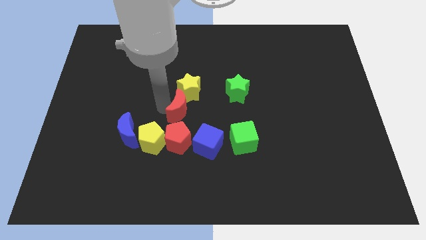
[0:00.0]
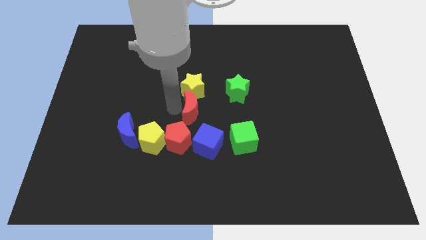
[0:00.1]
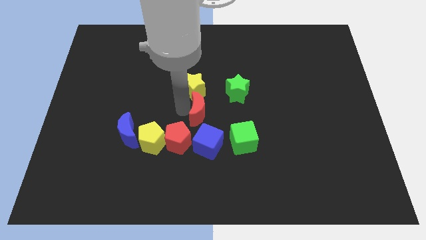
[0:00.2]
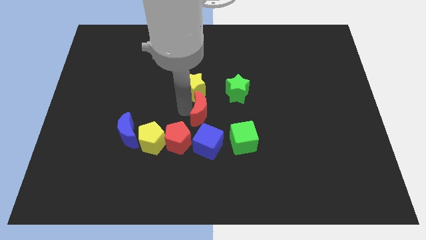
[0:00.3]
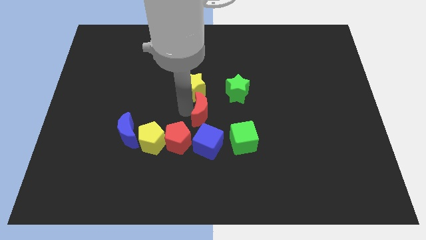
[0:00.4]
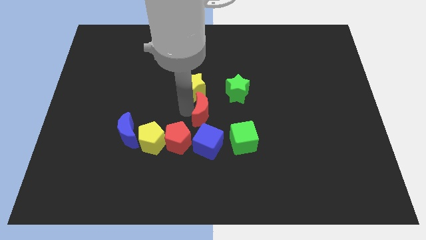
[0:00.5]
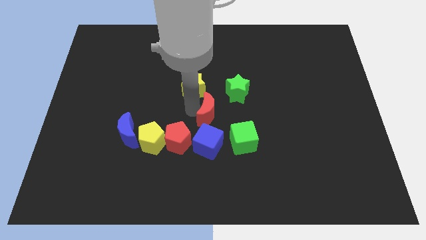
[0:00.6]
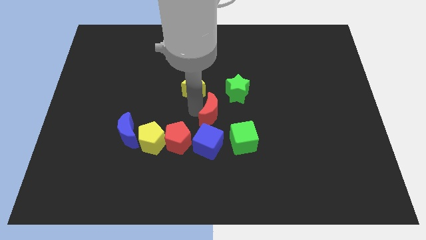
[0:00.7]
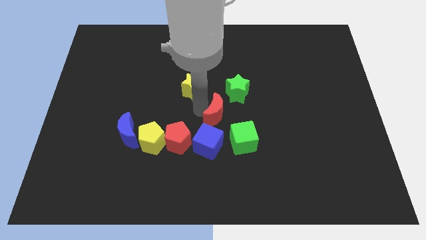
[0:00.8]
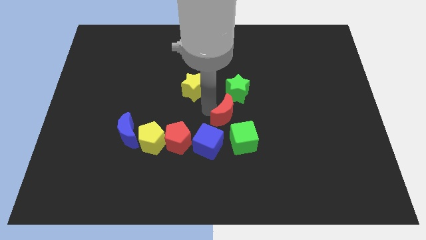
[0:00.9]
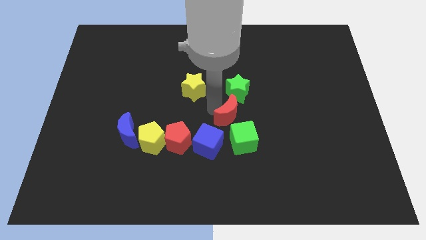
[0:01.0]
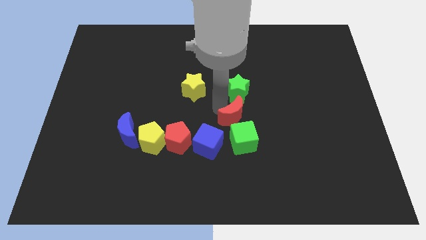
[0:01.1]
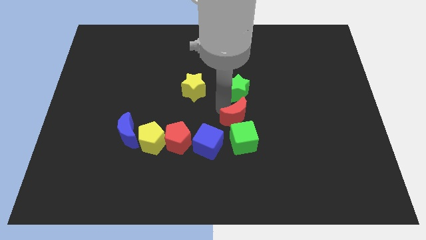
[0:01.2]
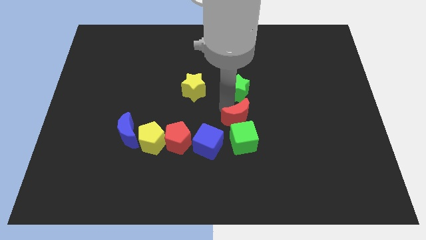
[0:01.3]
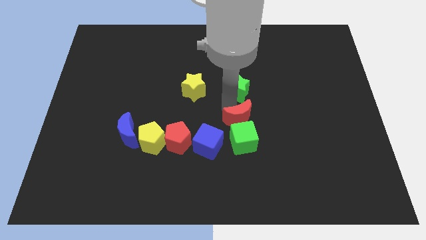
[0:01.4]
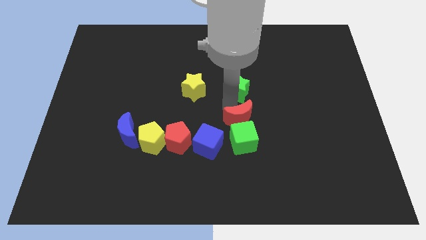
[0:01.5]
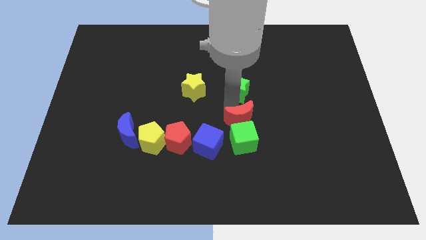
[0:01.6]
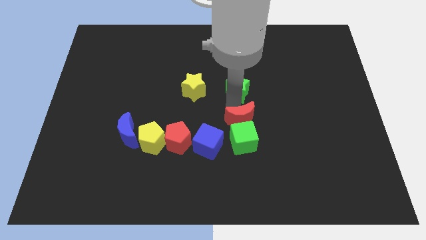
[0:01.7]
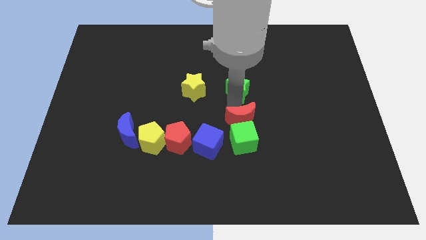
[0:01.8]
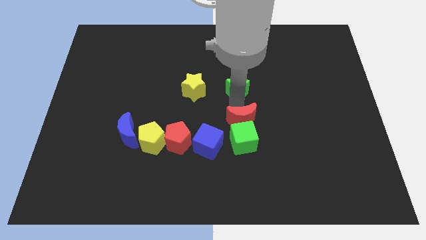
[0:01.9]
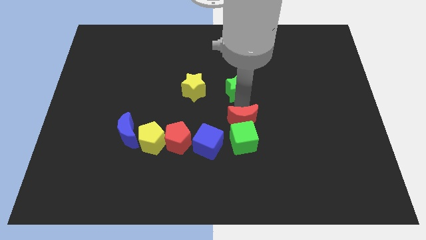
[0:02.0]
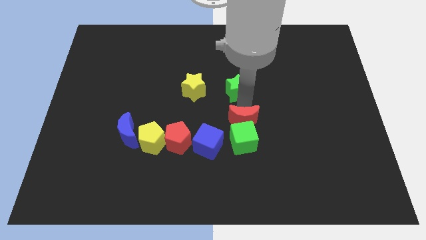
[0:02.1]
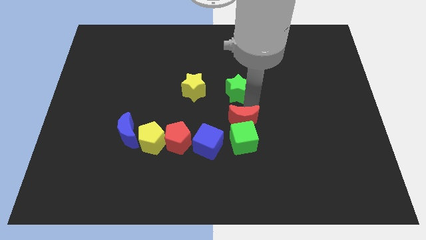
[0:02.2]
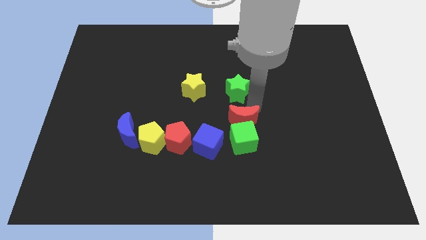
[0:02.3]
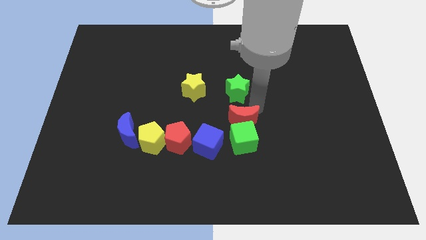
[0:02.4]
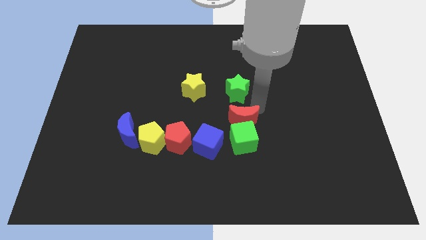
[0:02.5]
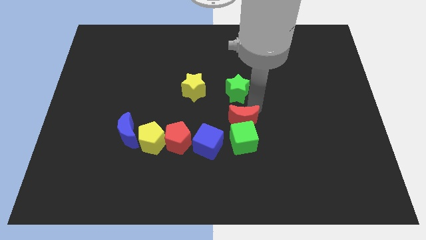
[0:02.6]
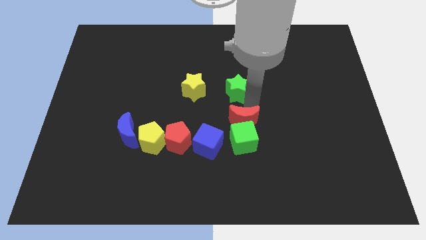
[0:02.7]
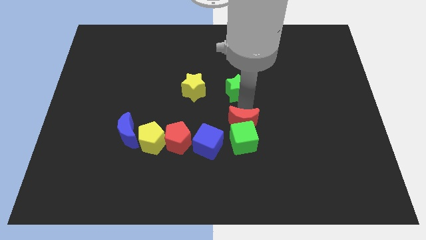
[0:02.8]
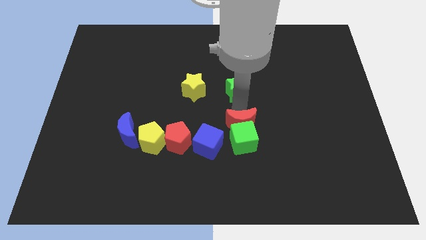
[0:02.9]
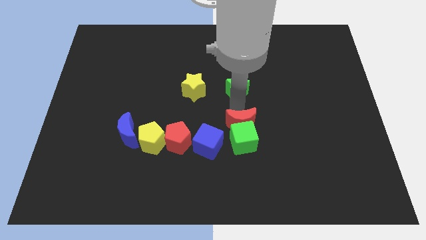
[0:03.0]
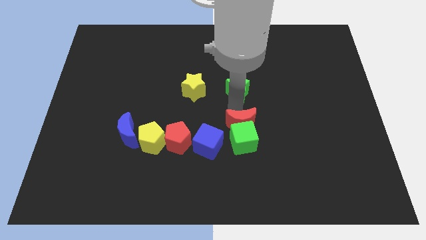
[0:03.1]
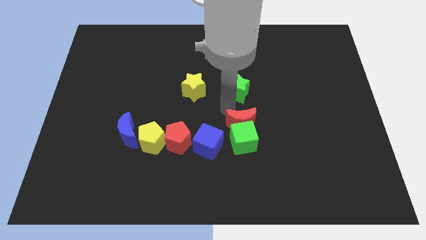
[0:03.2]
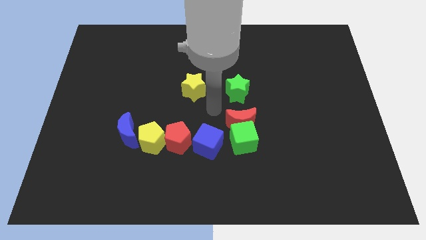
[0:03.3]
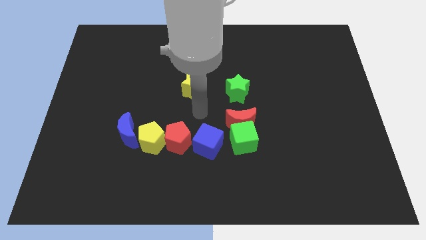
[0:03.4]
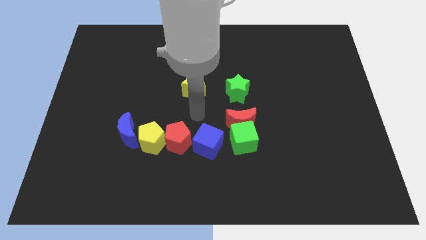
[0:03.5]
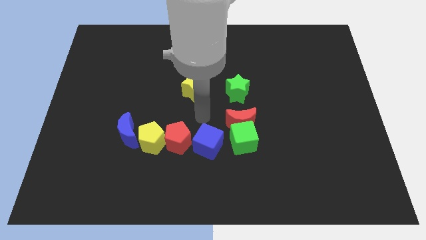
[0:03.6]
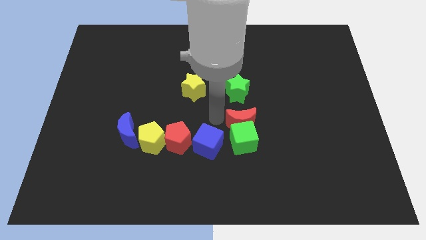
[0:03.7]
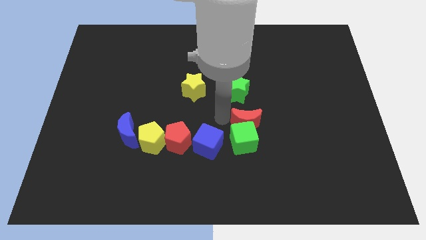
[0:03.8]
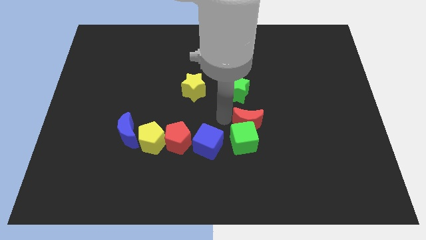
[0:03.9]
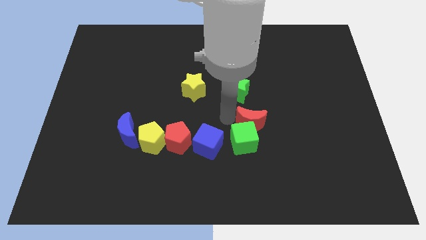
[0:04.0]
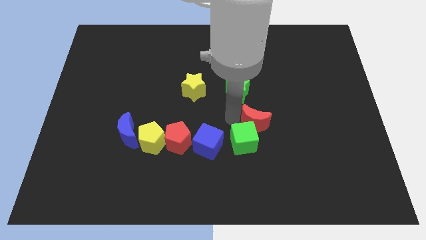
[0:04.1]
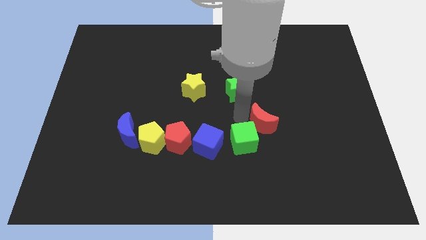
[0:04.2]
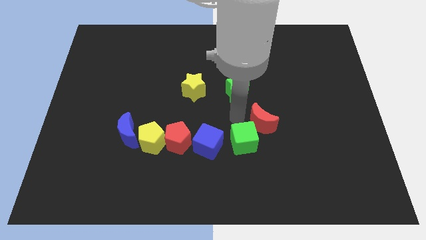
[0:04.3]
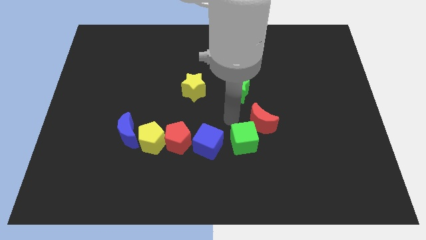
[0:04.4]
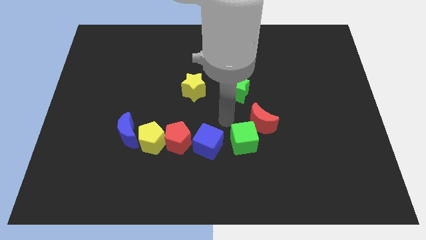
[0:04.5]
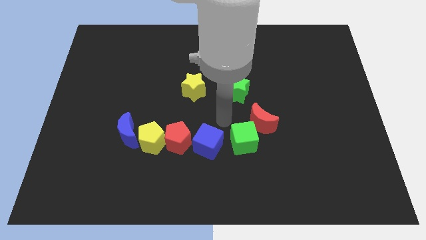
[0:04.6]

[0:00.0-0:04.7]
move the red crescent top right to the green cube

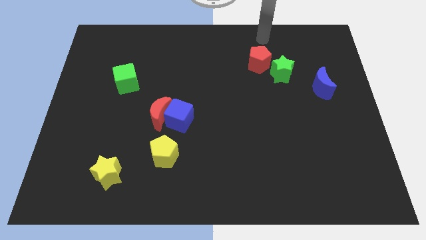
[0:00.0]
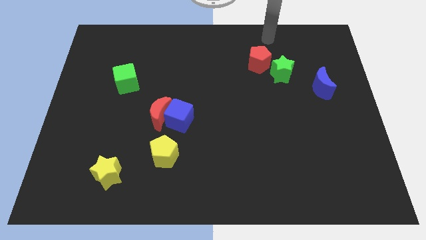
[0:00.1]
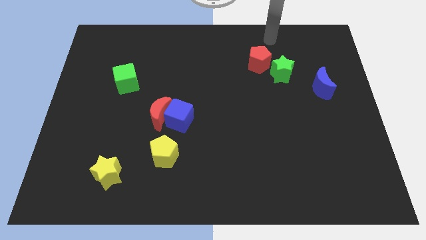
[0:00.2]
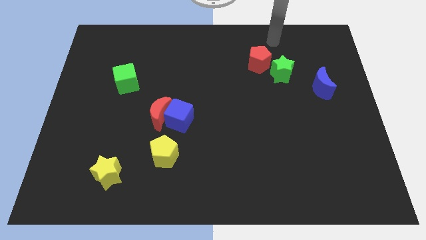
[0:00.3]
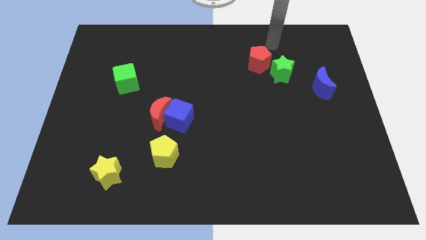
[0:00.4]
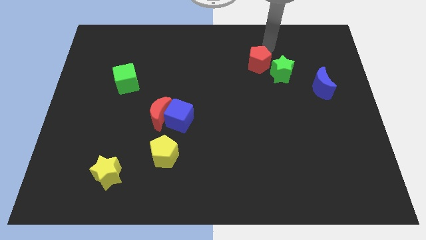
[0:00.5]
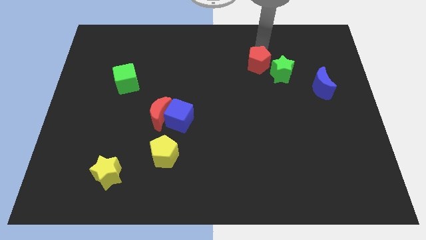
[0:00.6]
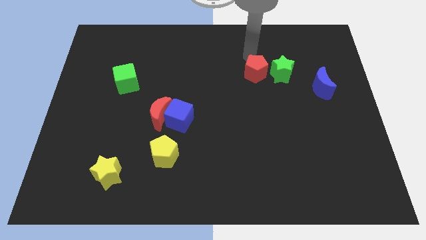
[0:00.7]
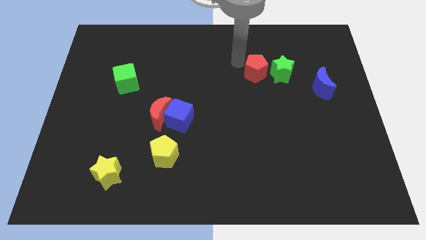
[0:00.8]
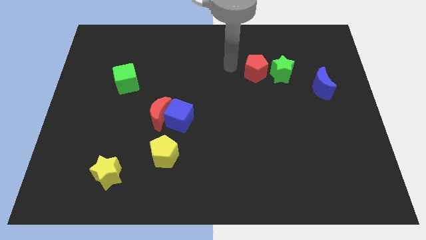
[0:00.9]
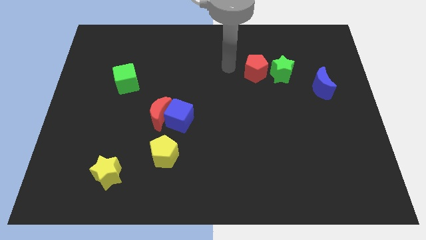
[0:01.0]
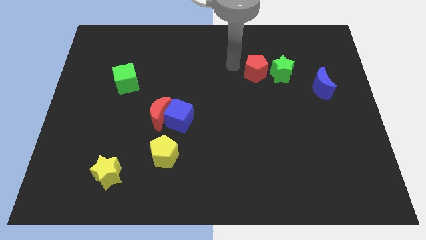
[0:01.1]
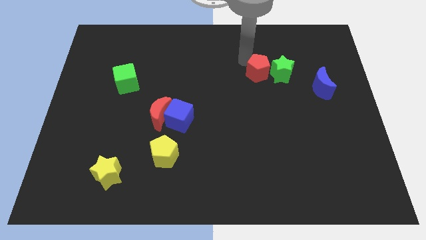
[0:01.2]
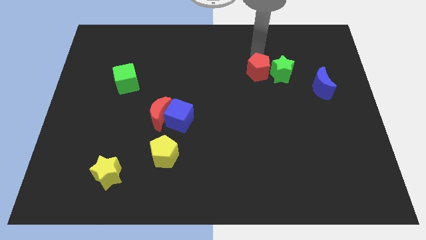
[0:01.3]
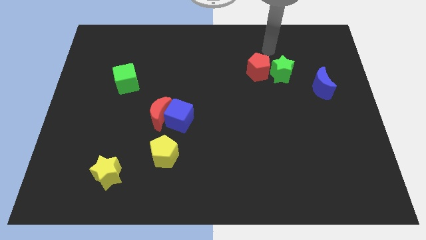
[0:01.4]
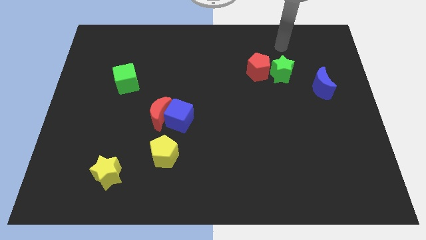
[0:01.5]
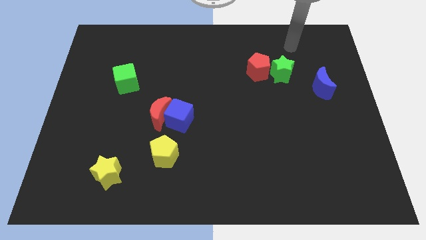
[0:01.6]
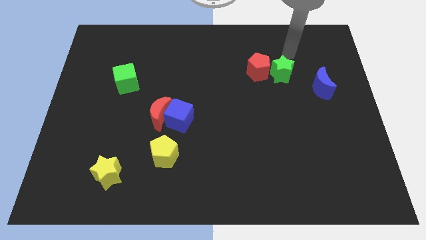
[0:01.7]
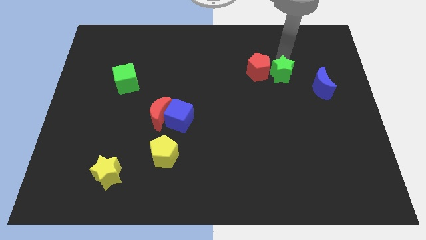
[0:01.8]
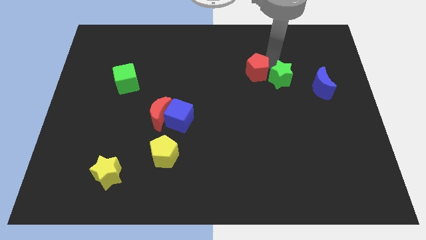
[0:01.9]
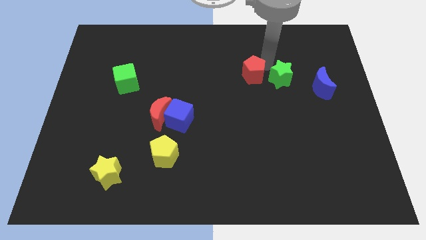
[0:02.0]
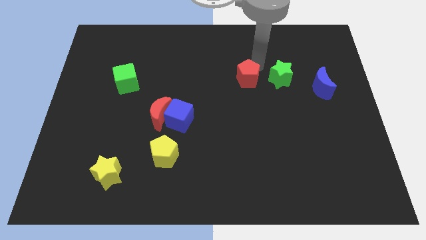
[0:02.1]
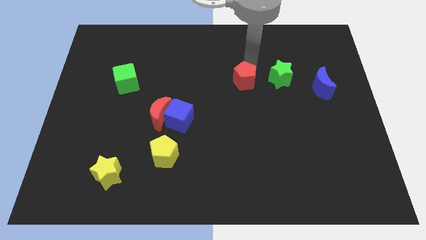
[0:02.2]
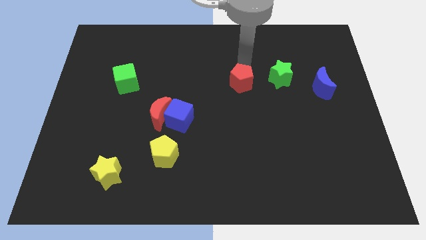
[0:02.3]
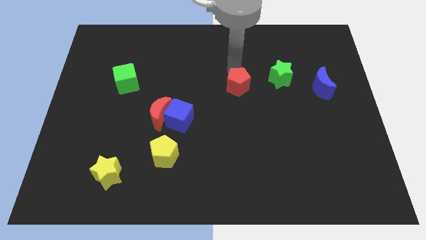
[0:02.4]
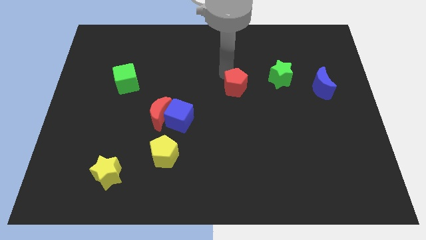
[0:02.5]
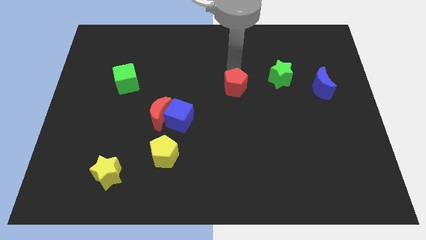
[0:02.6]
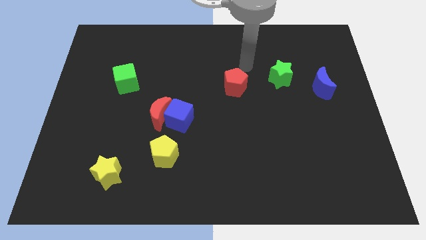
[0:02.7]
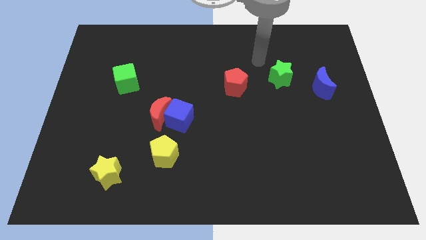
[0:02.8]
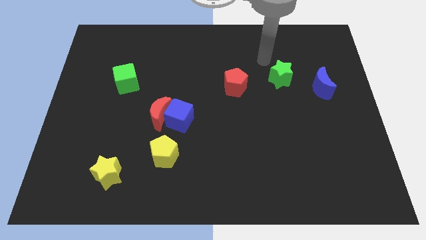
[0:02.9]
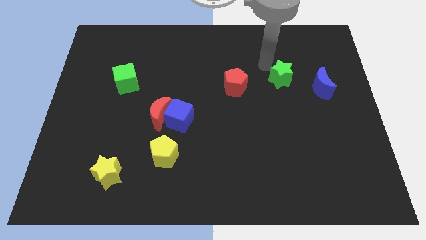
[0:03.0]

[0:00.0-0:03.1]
move the red pentagon to the left of the green star

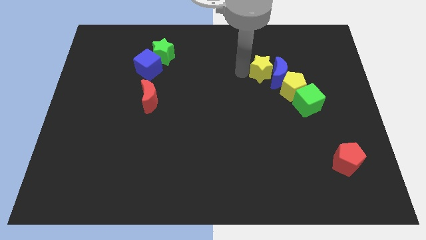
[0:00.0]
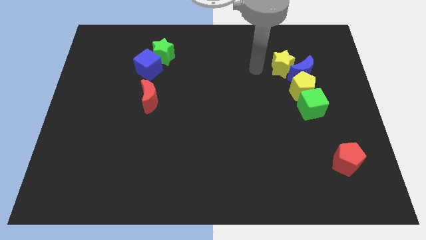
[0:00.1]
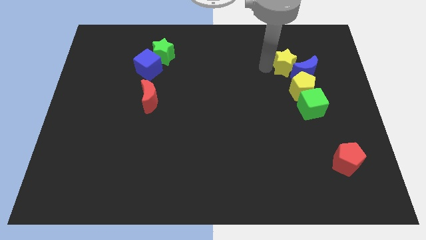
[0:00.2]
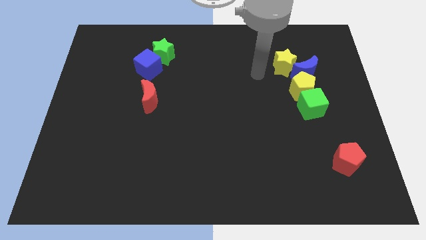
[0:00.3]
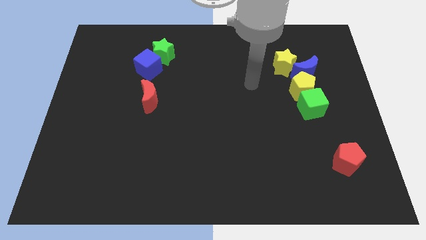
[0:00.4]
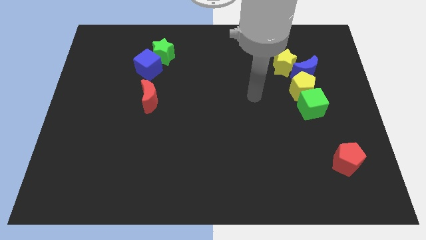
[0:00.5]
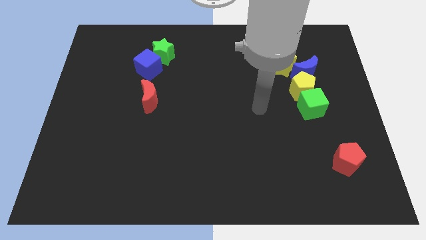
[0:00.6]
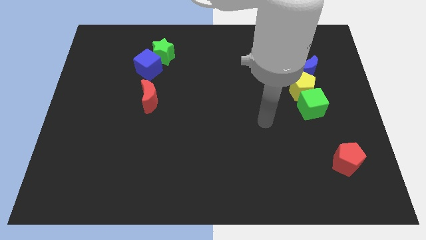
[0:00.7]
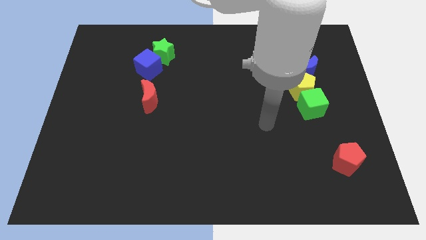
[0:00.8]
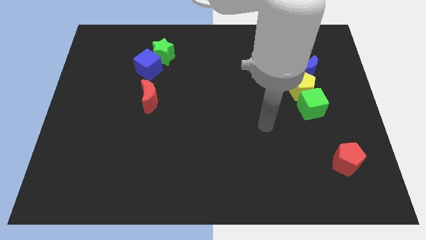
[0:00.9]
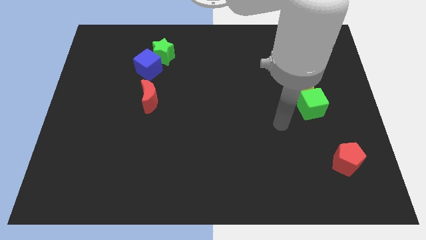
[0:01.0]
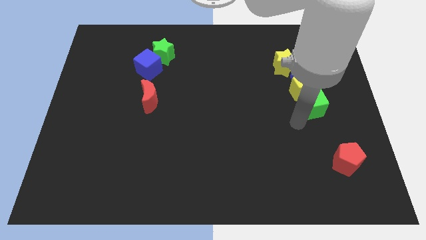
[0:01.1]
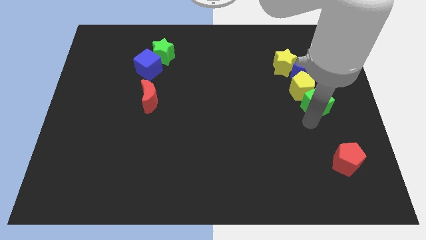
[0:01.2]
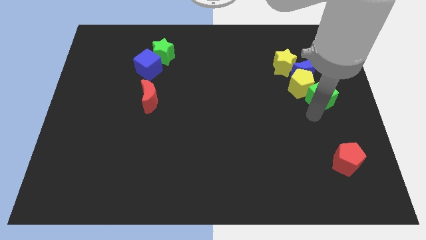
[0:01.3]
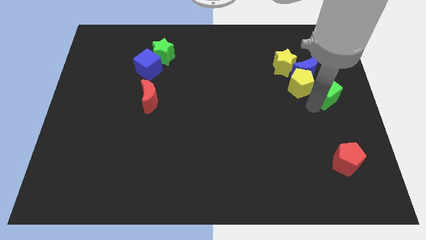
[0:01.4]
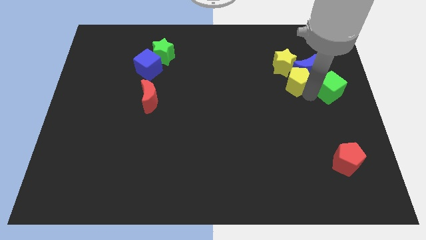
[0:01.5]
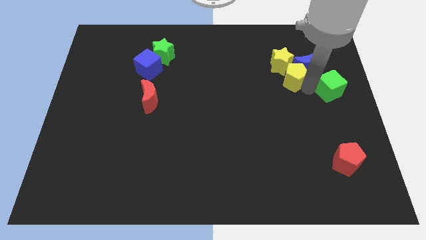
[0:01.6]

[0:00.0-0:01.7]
place your arm in between the yellow pentagon and green cube
